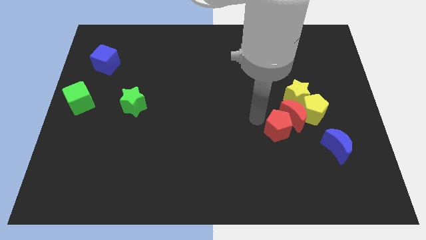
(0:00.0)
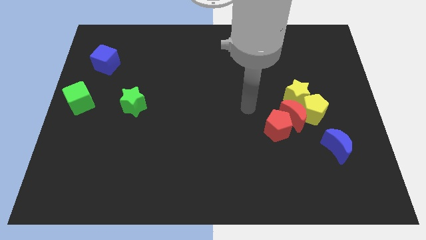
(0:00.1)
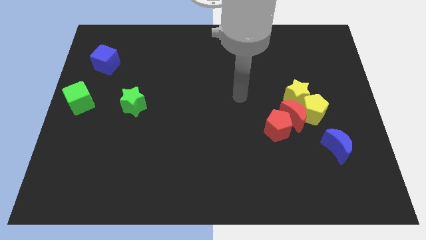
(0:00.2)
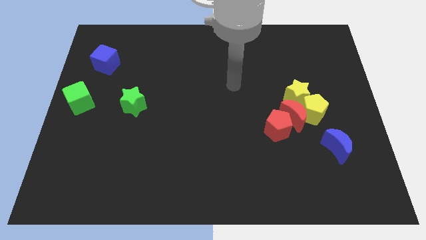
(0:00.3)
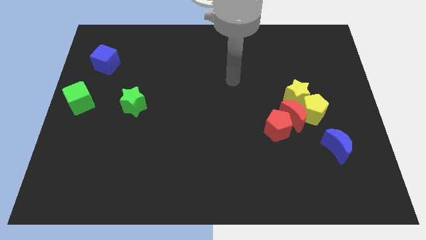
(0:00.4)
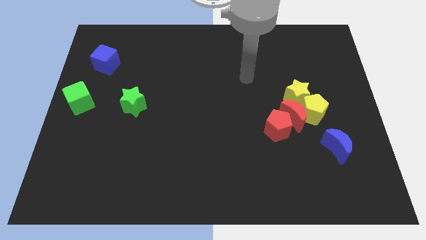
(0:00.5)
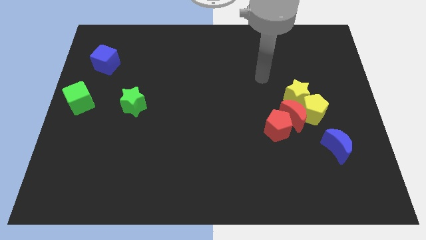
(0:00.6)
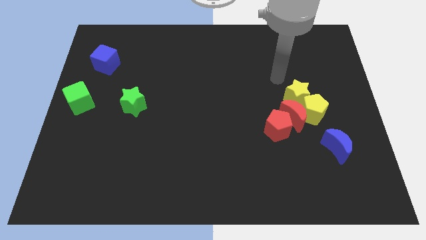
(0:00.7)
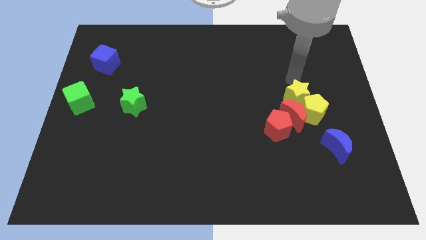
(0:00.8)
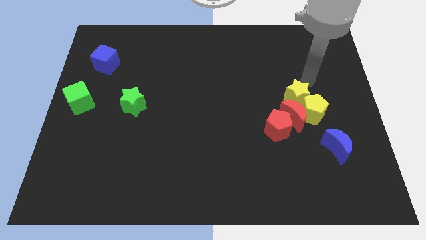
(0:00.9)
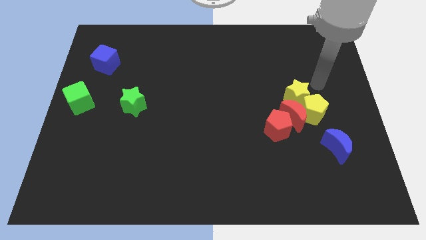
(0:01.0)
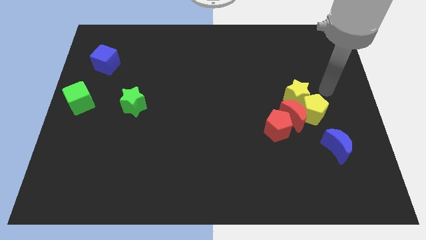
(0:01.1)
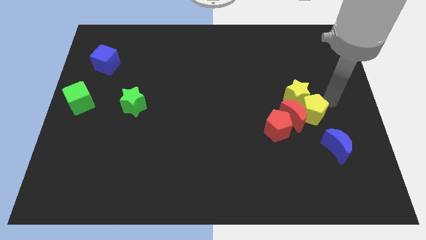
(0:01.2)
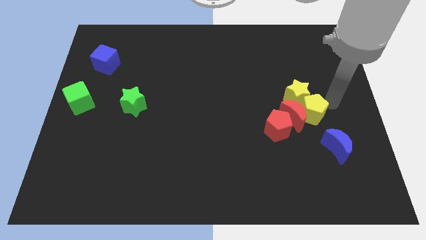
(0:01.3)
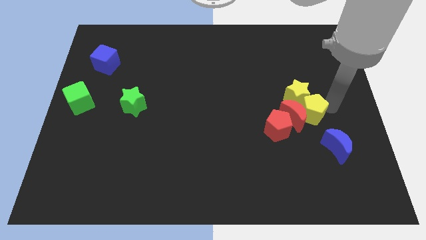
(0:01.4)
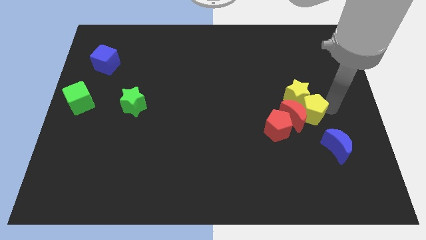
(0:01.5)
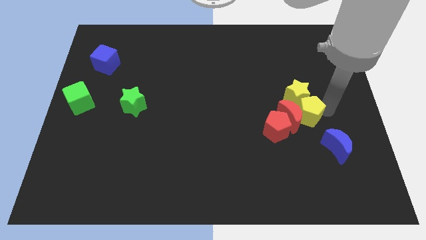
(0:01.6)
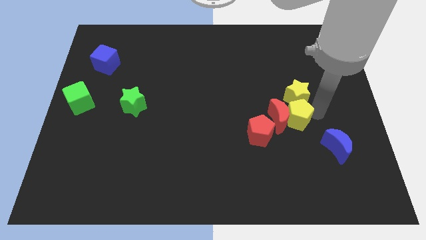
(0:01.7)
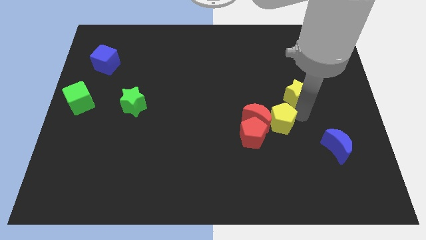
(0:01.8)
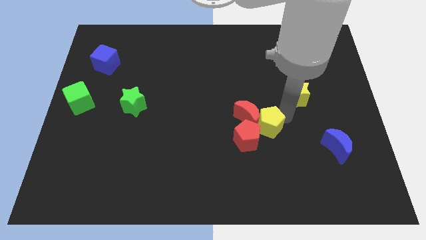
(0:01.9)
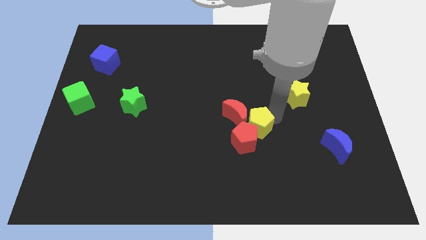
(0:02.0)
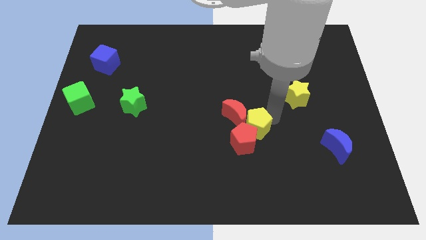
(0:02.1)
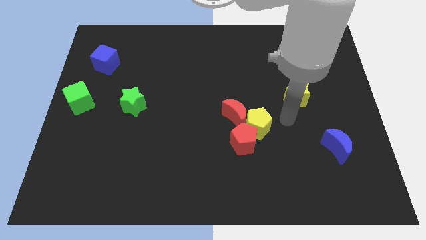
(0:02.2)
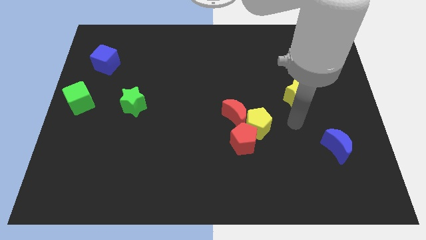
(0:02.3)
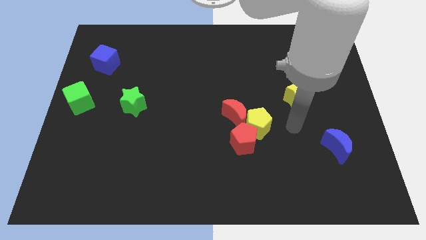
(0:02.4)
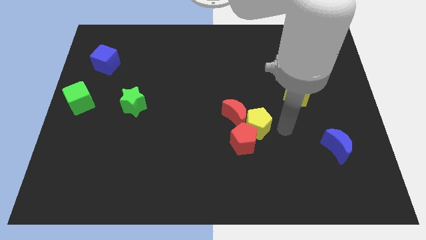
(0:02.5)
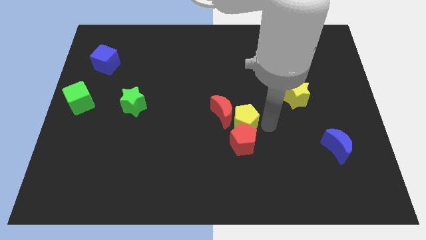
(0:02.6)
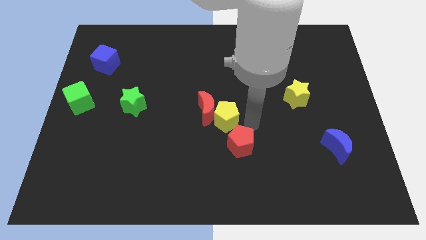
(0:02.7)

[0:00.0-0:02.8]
move the yellow pentagon and the red blocks towards the center of the board

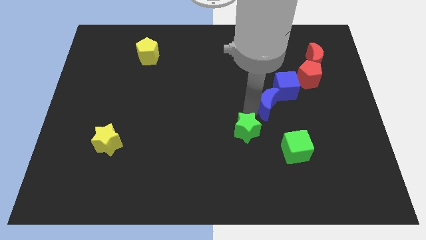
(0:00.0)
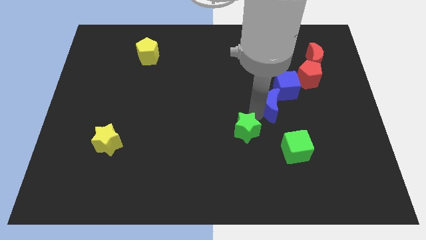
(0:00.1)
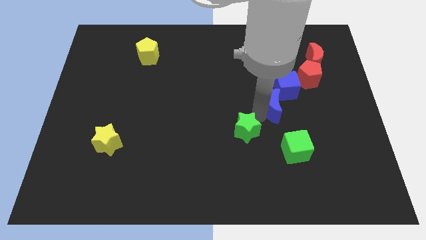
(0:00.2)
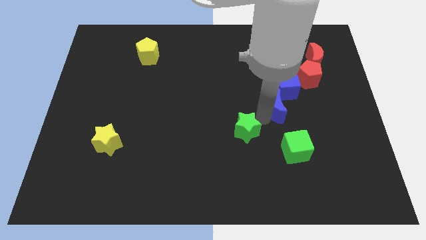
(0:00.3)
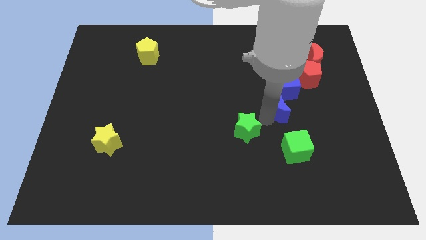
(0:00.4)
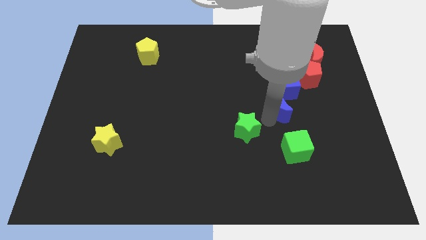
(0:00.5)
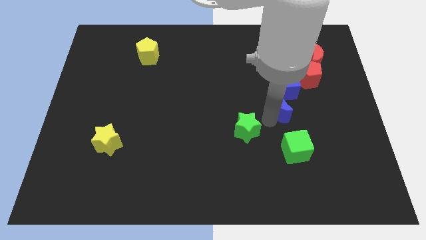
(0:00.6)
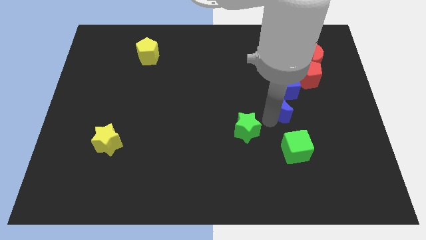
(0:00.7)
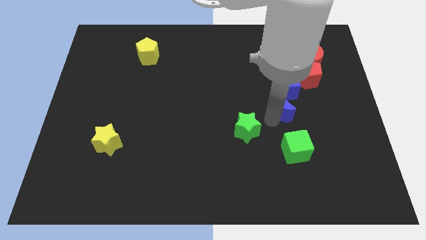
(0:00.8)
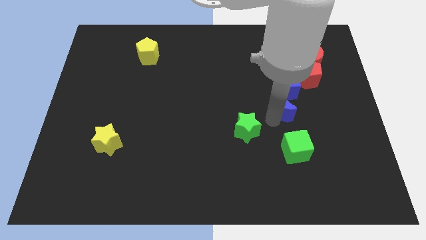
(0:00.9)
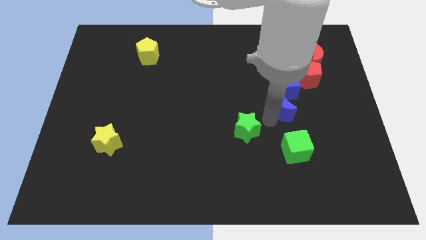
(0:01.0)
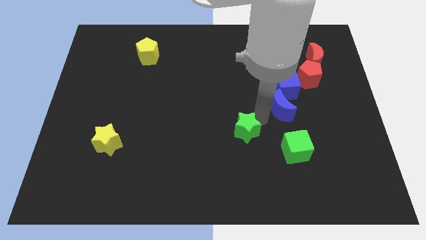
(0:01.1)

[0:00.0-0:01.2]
push the blue crescent under the blue cube

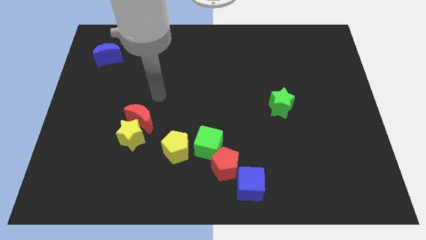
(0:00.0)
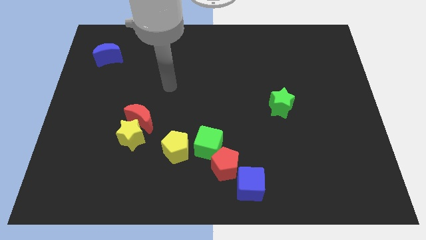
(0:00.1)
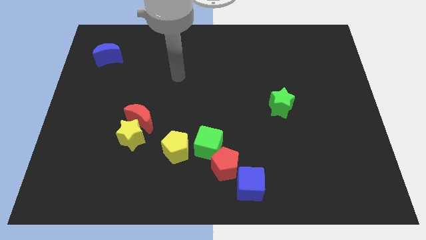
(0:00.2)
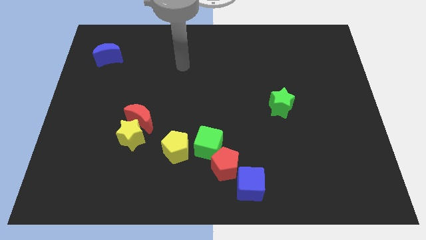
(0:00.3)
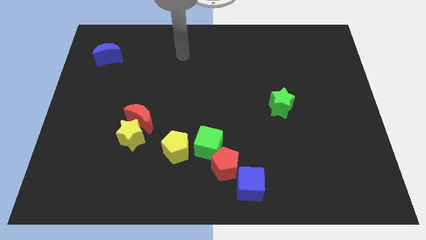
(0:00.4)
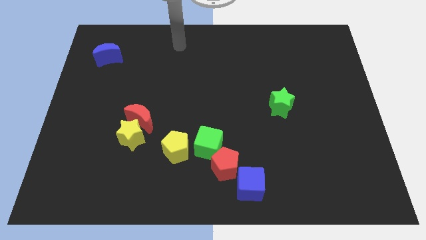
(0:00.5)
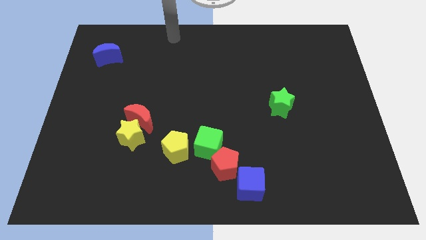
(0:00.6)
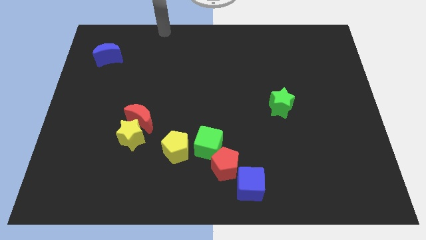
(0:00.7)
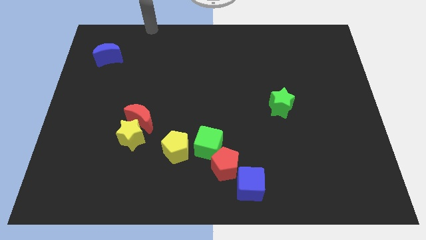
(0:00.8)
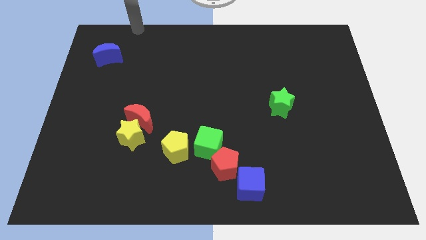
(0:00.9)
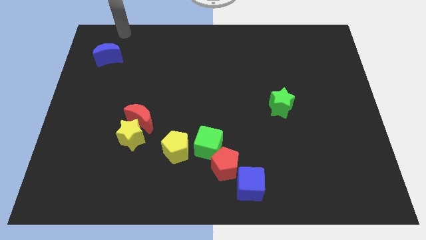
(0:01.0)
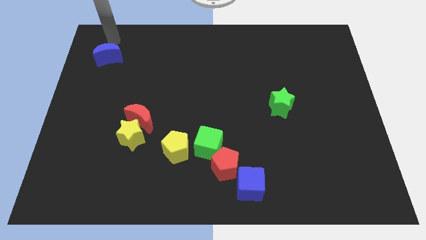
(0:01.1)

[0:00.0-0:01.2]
place your arm on top of the blue crescent

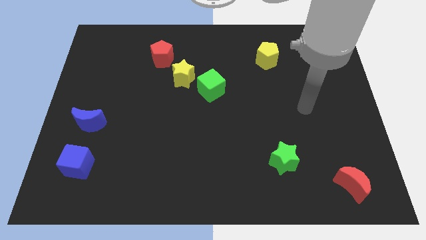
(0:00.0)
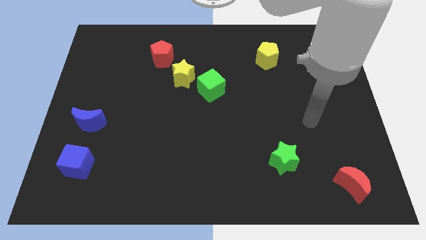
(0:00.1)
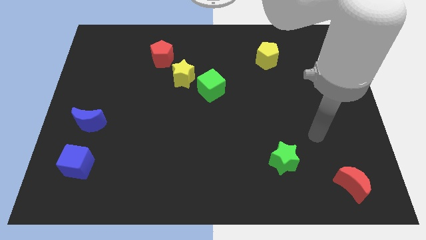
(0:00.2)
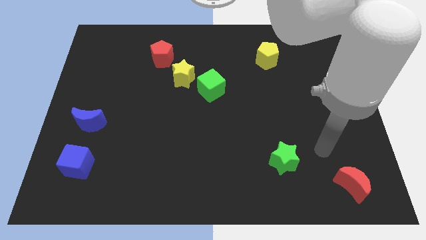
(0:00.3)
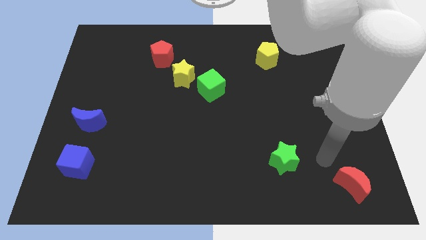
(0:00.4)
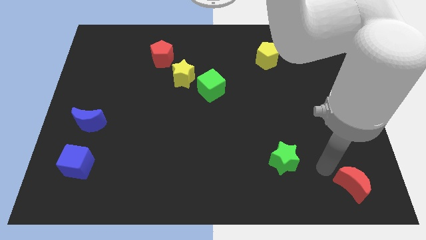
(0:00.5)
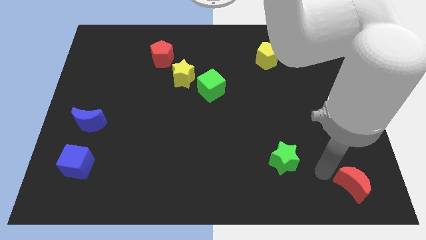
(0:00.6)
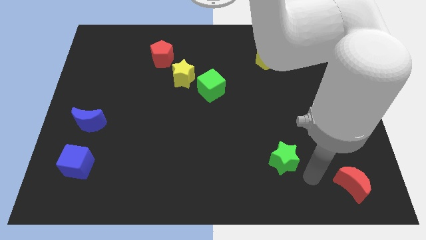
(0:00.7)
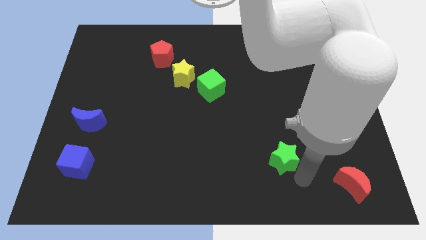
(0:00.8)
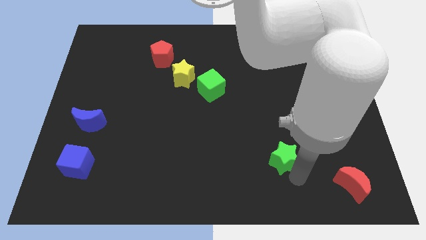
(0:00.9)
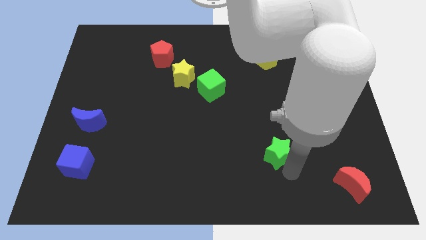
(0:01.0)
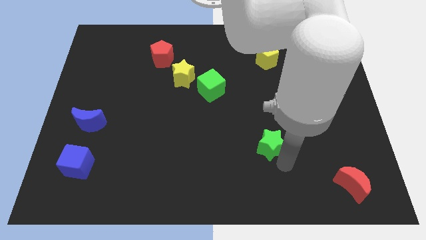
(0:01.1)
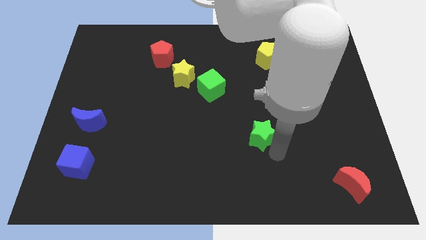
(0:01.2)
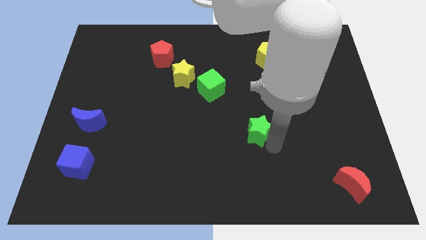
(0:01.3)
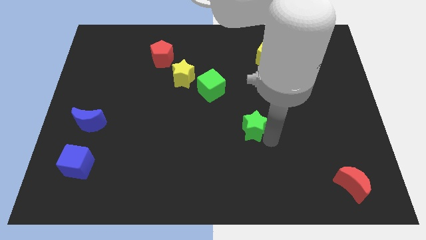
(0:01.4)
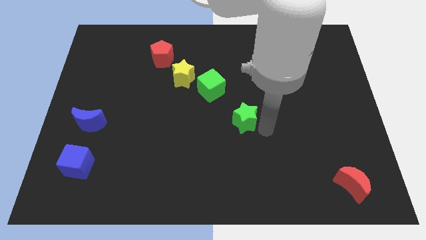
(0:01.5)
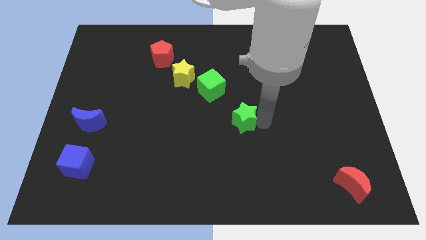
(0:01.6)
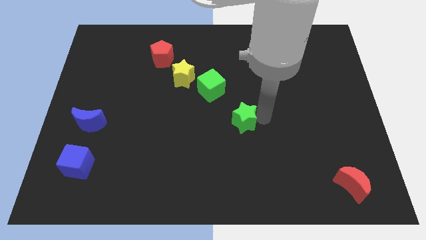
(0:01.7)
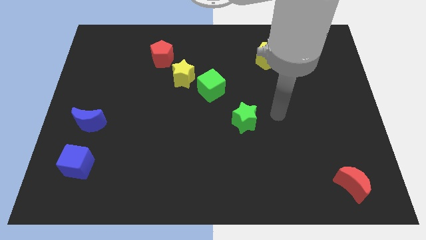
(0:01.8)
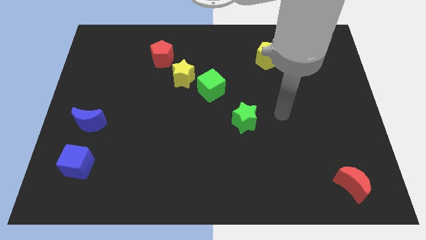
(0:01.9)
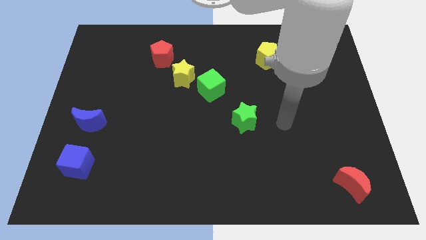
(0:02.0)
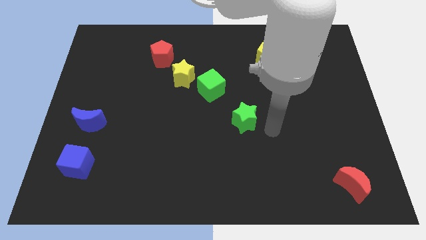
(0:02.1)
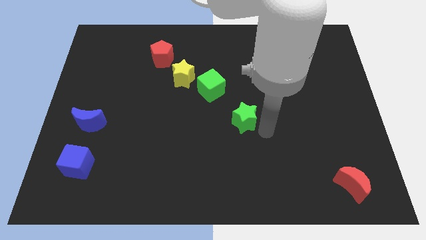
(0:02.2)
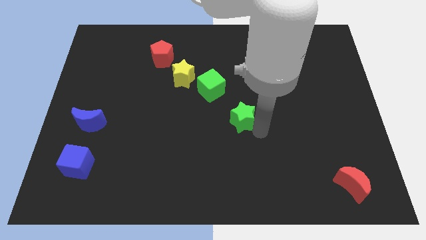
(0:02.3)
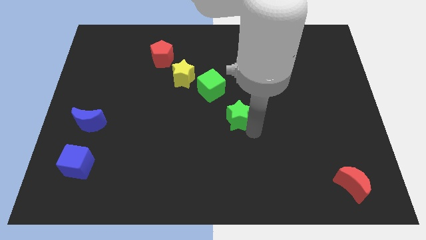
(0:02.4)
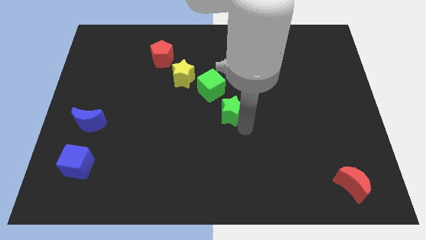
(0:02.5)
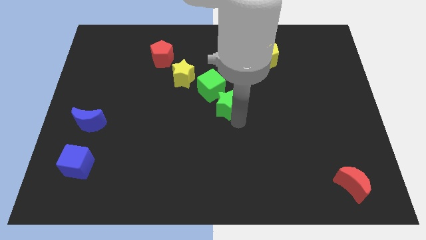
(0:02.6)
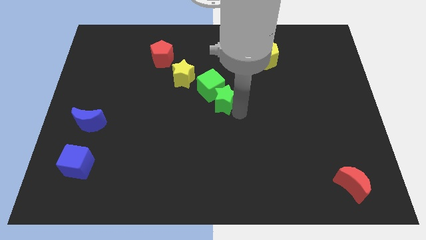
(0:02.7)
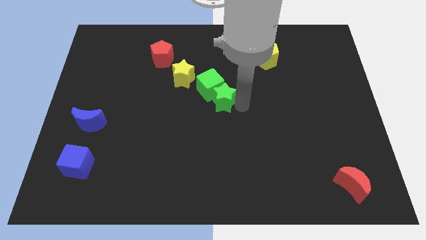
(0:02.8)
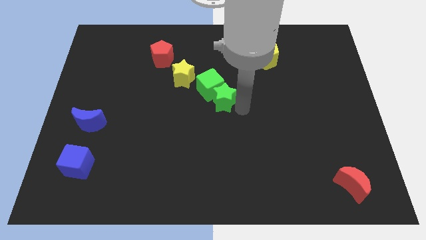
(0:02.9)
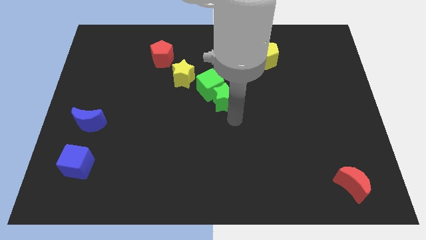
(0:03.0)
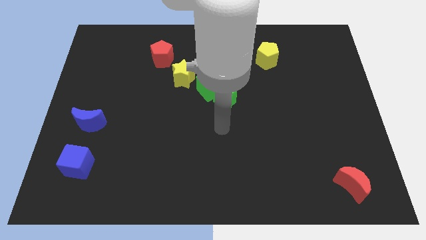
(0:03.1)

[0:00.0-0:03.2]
push the green star into the green cube

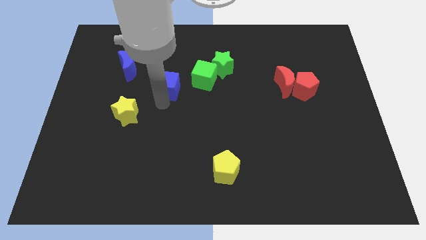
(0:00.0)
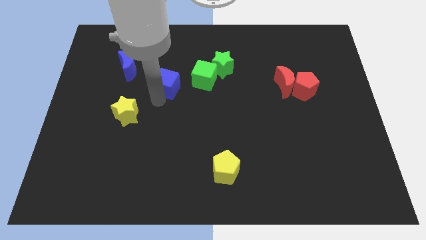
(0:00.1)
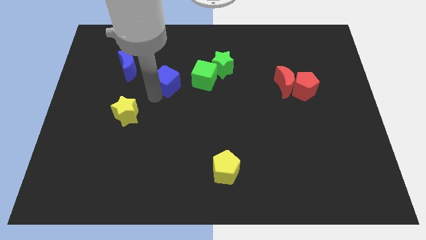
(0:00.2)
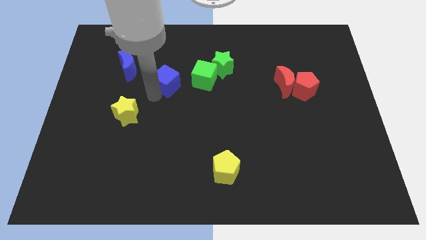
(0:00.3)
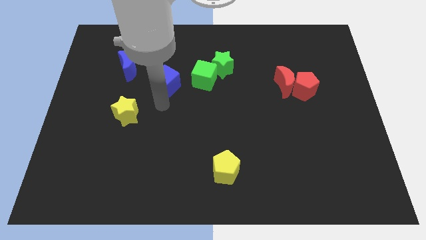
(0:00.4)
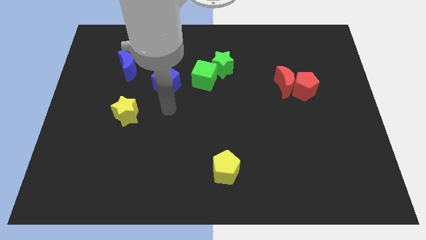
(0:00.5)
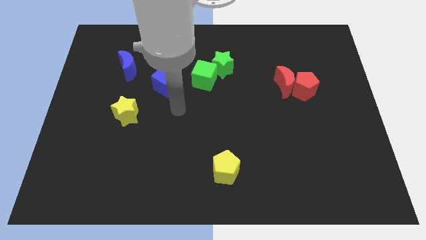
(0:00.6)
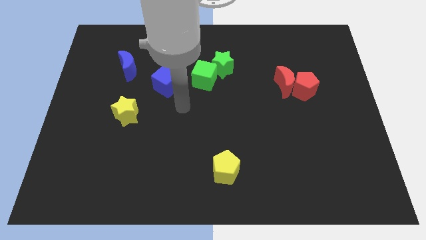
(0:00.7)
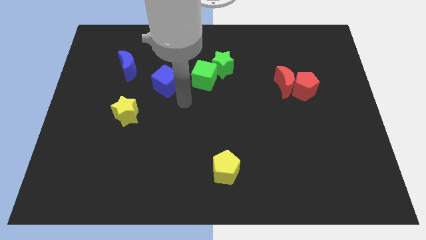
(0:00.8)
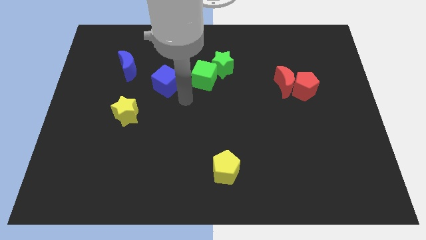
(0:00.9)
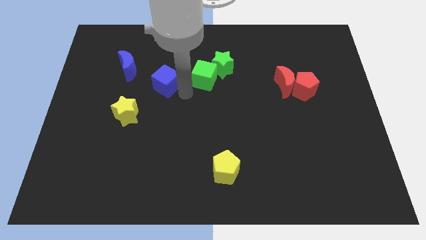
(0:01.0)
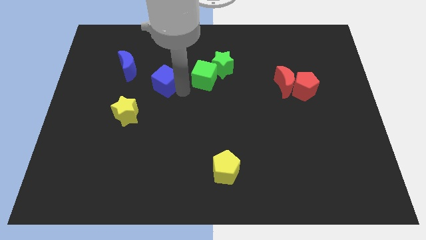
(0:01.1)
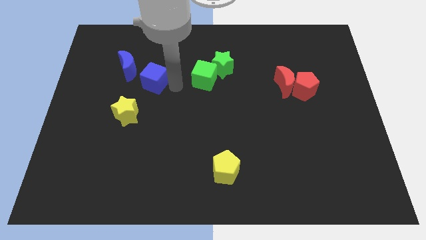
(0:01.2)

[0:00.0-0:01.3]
move the blue cube left to the green cube
